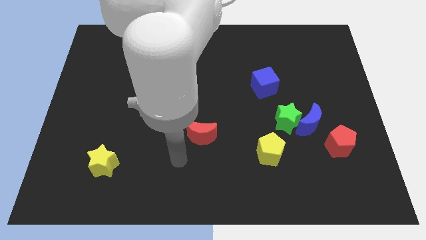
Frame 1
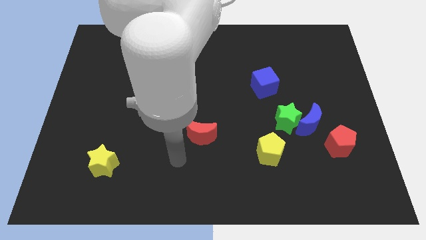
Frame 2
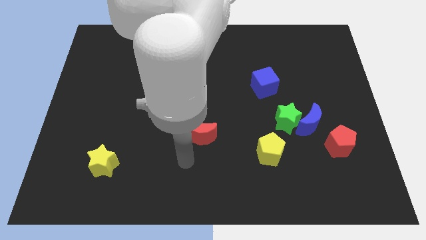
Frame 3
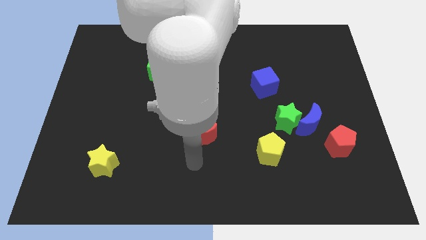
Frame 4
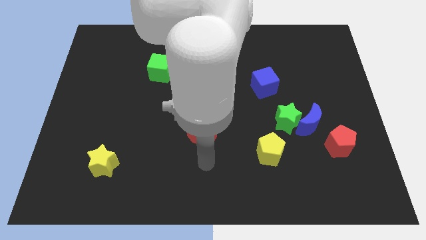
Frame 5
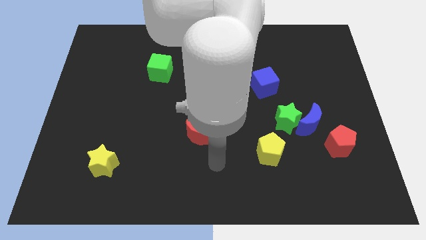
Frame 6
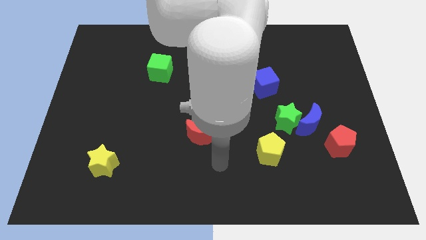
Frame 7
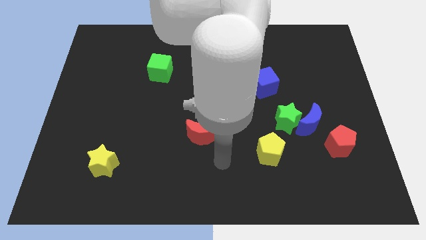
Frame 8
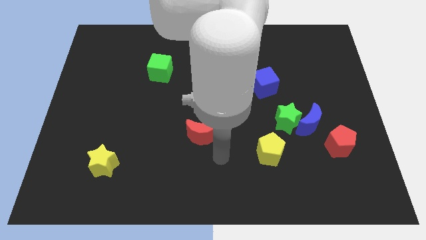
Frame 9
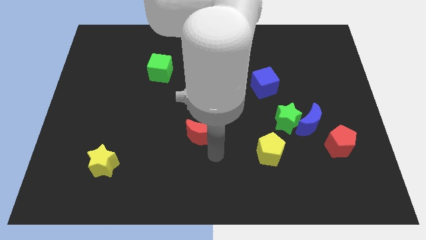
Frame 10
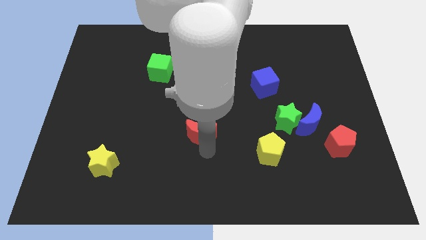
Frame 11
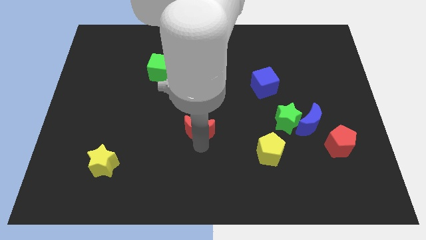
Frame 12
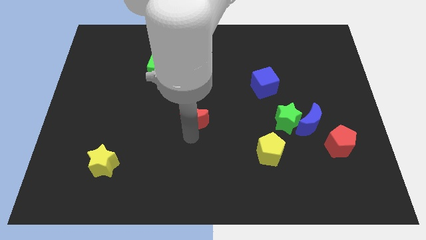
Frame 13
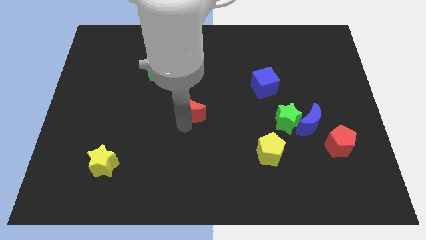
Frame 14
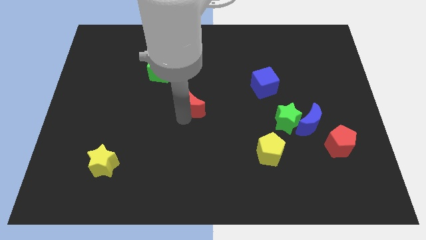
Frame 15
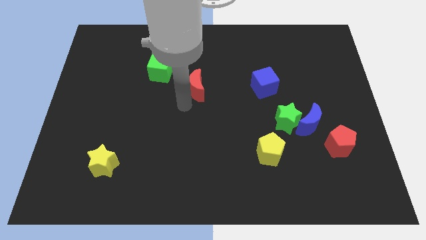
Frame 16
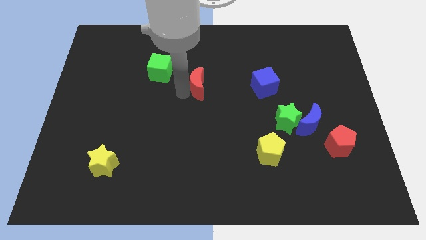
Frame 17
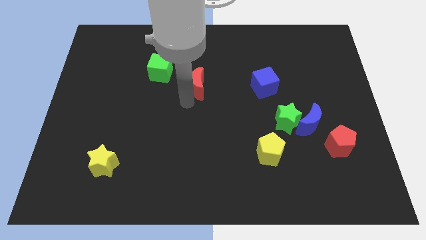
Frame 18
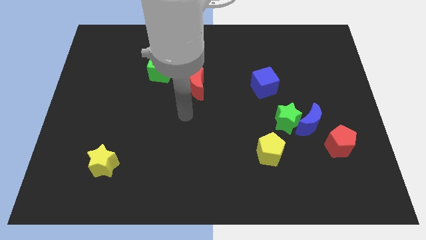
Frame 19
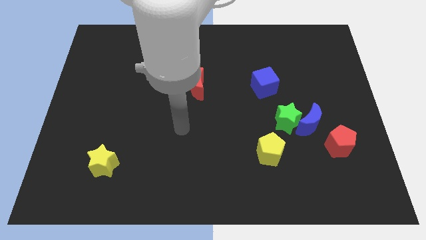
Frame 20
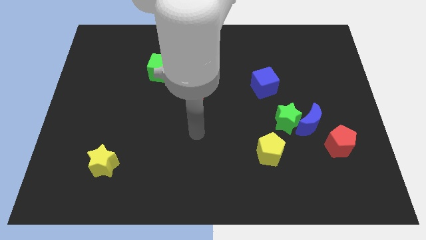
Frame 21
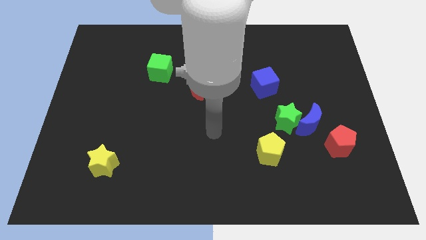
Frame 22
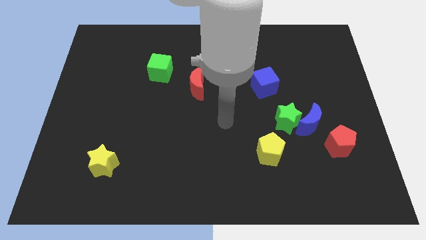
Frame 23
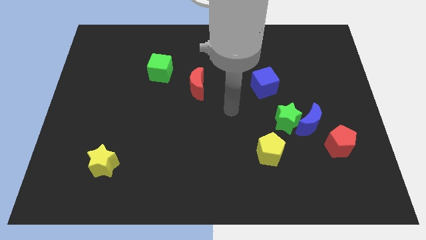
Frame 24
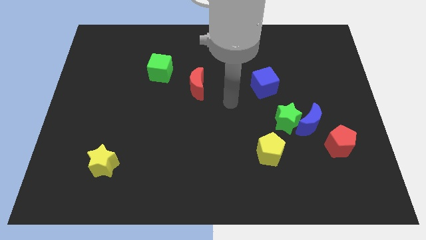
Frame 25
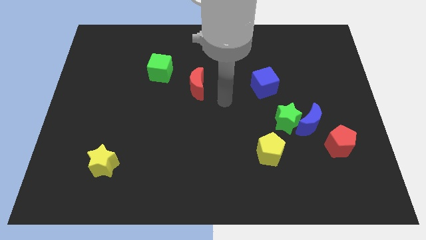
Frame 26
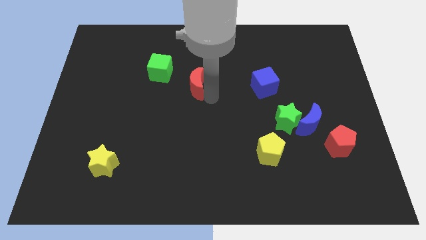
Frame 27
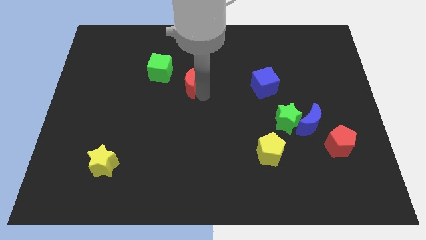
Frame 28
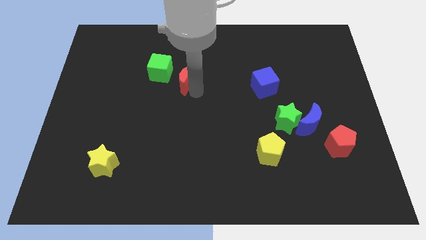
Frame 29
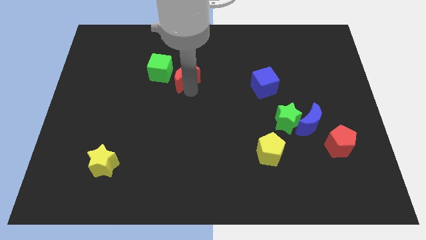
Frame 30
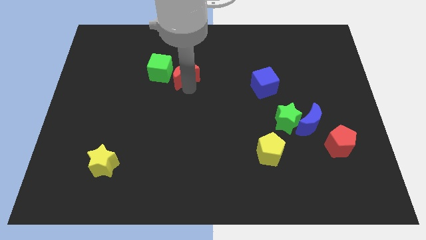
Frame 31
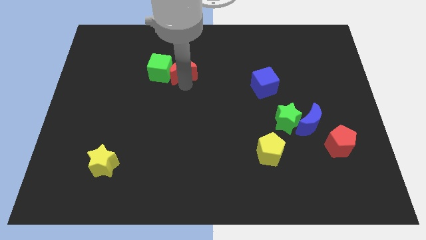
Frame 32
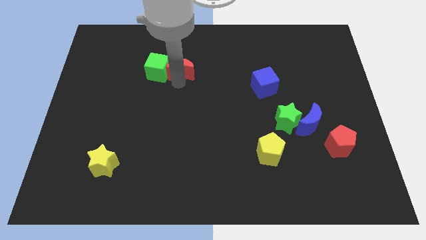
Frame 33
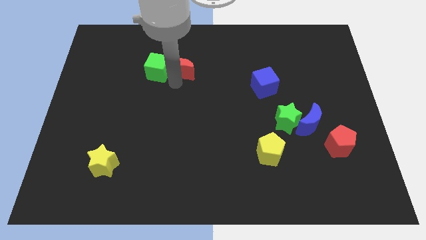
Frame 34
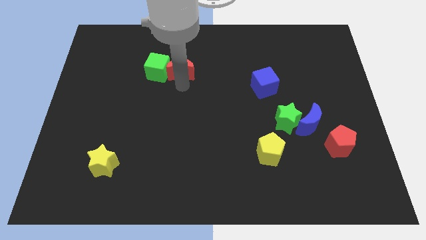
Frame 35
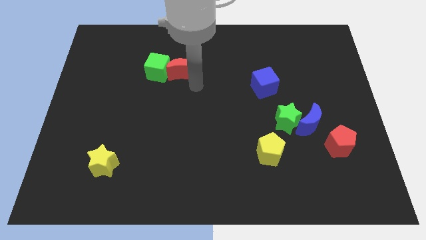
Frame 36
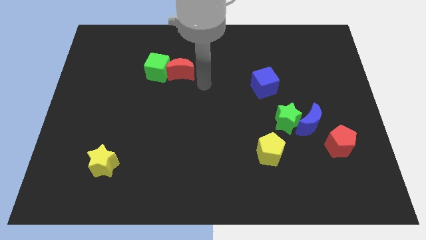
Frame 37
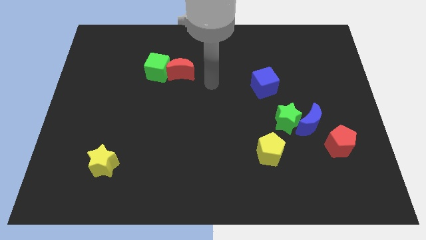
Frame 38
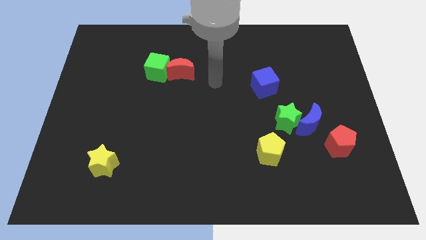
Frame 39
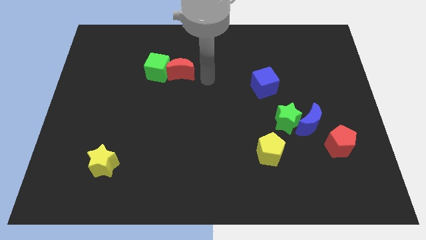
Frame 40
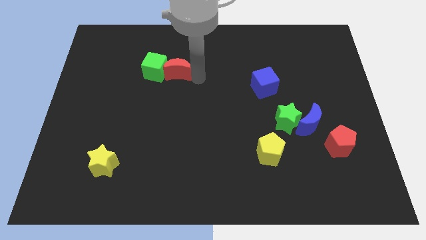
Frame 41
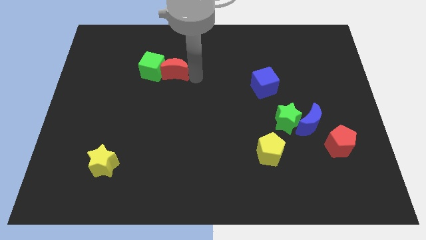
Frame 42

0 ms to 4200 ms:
push the red crescent towards the center top of the board

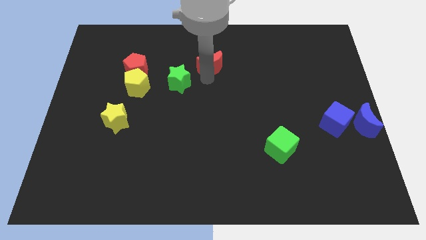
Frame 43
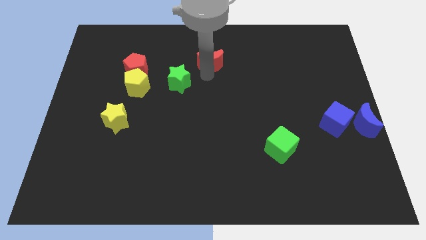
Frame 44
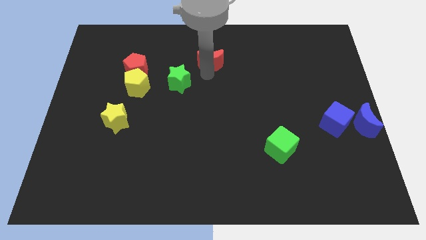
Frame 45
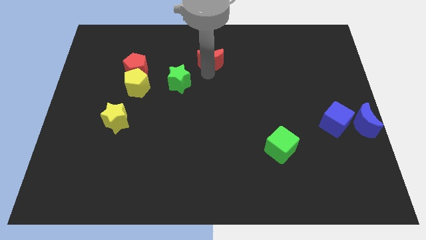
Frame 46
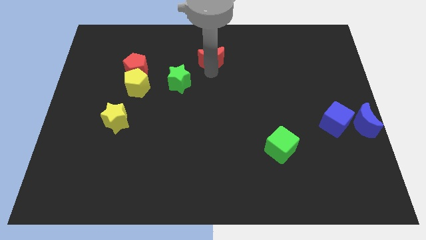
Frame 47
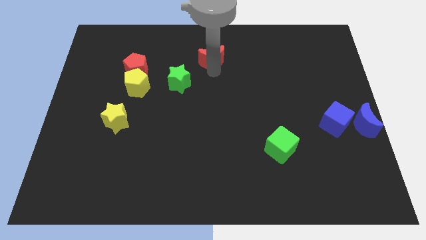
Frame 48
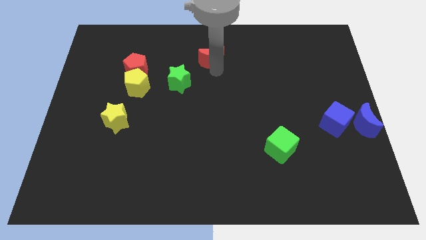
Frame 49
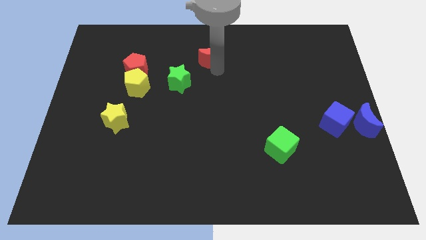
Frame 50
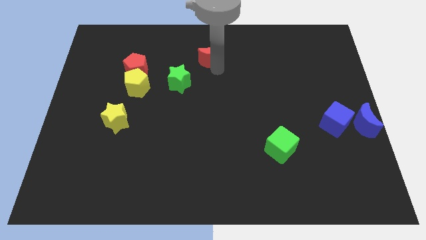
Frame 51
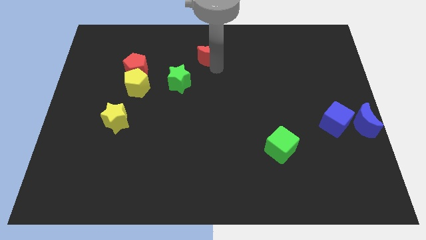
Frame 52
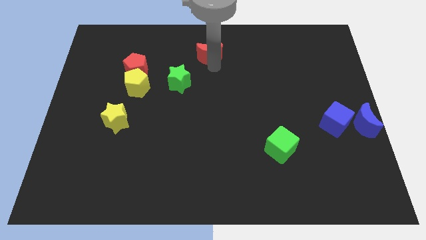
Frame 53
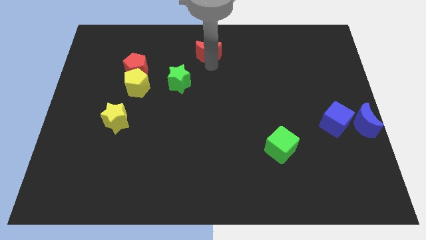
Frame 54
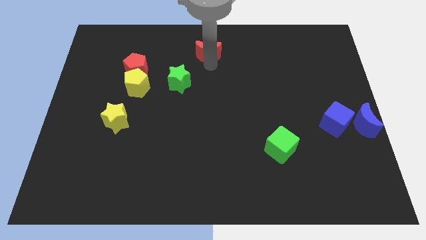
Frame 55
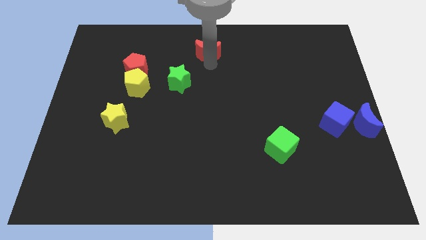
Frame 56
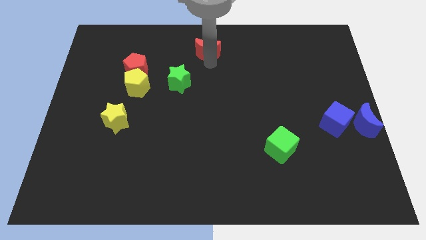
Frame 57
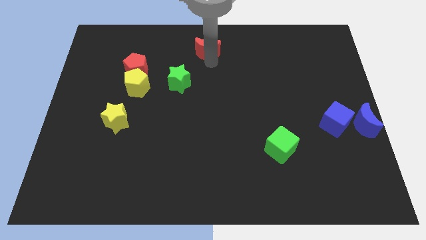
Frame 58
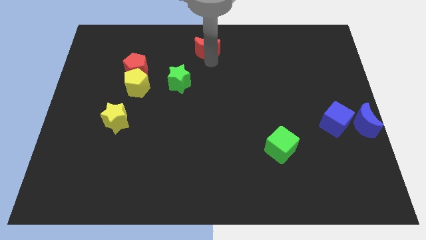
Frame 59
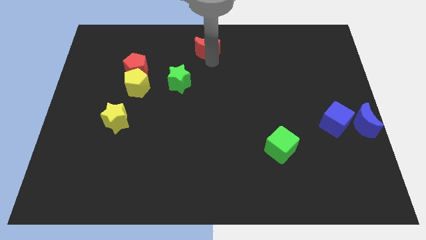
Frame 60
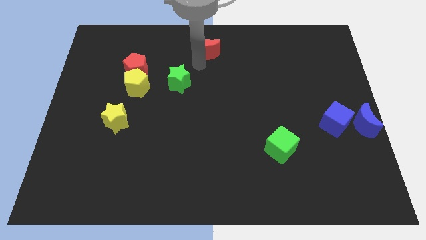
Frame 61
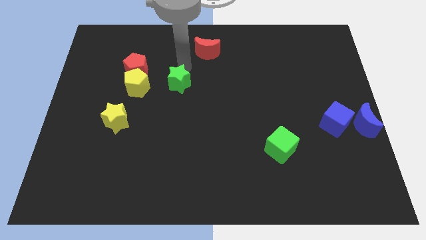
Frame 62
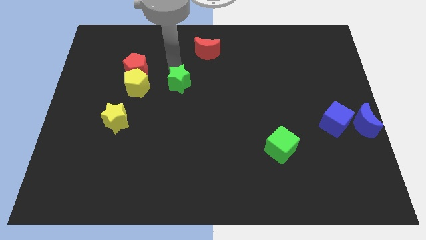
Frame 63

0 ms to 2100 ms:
move the red moon up slightly

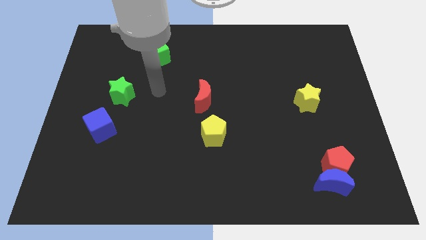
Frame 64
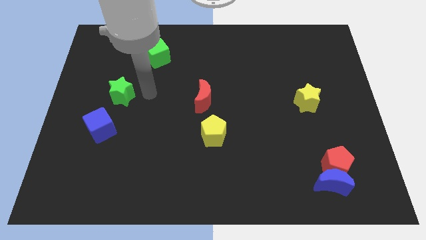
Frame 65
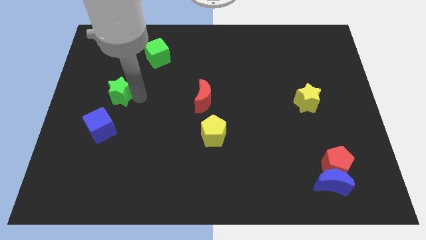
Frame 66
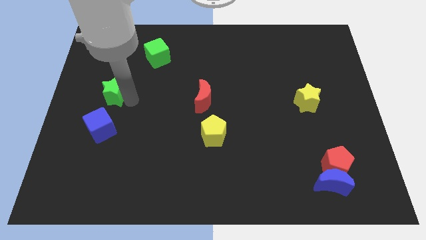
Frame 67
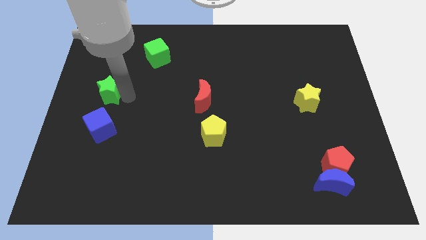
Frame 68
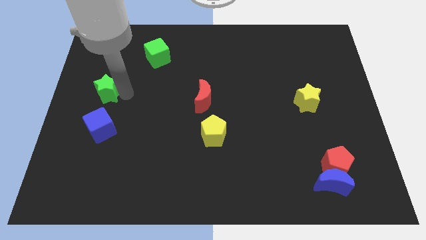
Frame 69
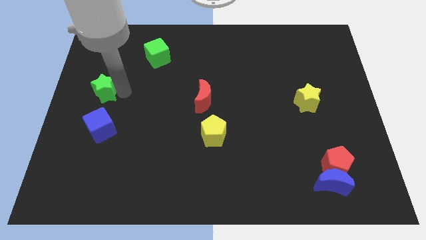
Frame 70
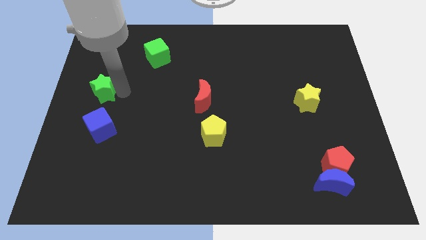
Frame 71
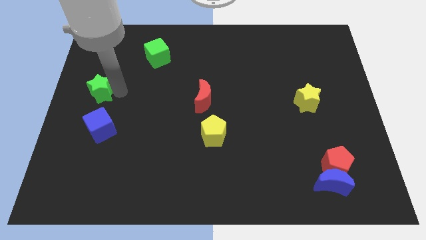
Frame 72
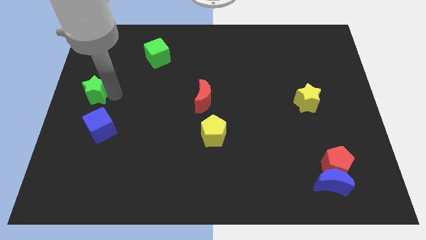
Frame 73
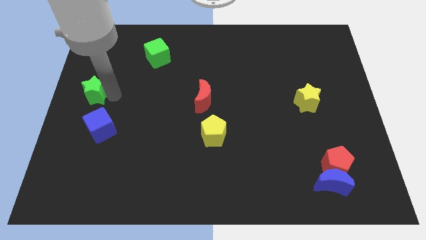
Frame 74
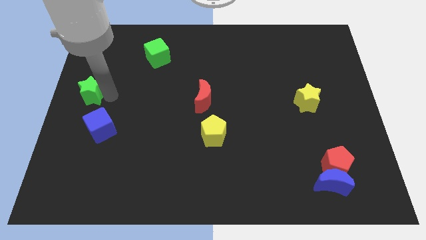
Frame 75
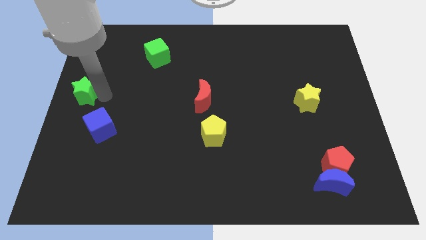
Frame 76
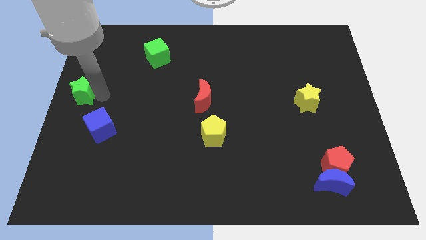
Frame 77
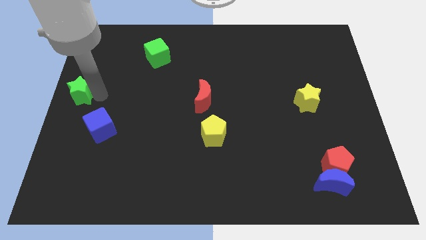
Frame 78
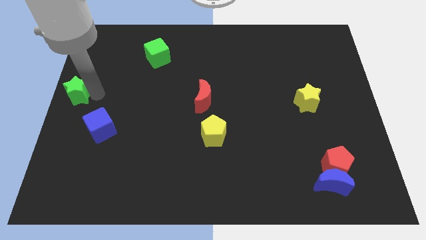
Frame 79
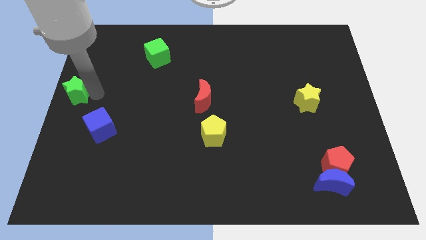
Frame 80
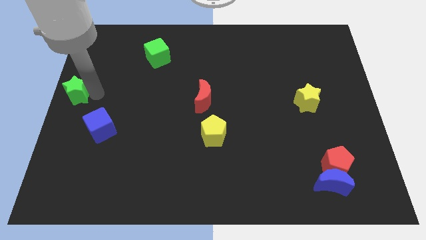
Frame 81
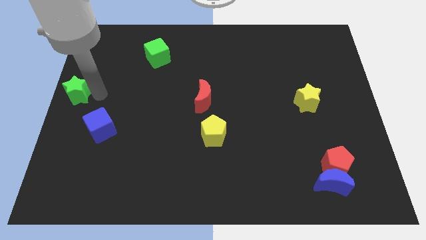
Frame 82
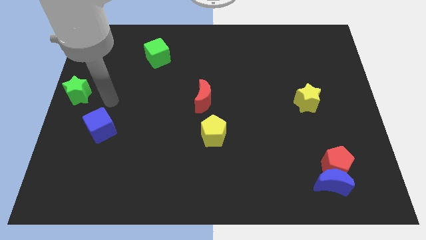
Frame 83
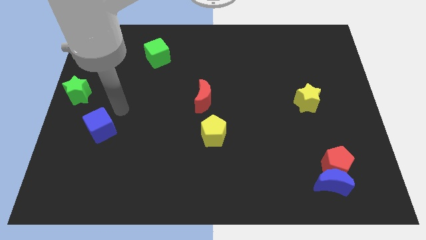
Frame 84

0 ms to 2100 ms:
push the green star to the left center of the board

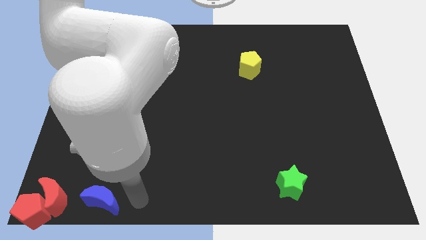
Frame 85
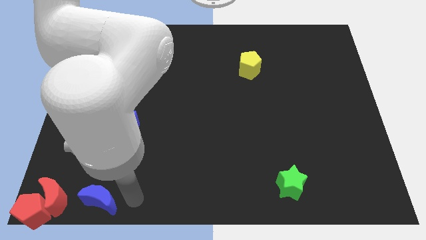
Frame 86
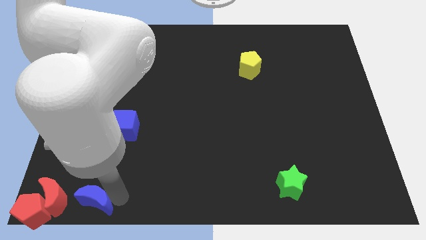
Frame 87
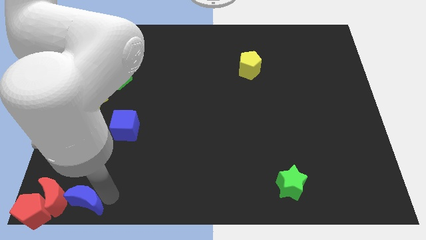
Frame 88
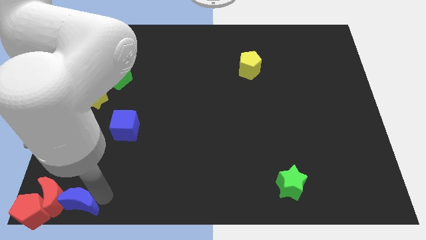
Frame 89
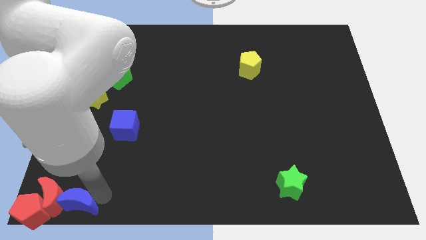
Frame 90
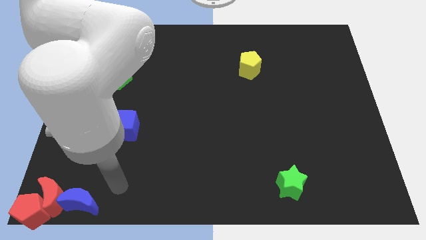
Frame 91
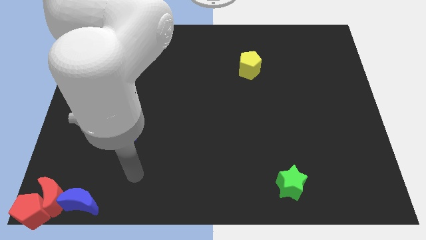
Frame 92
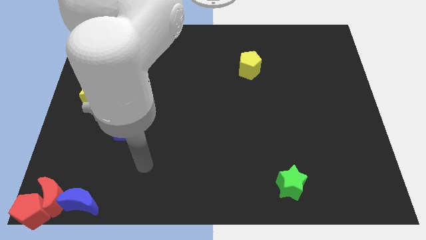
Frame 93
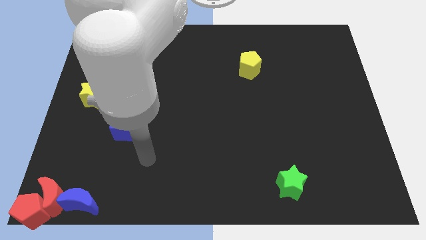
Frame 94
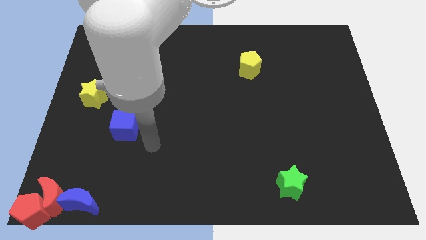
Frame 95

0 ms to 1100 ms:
push the blue moon into the red moon
